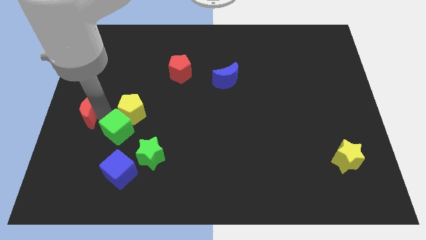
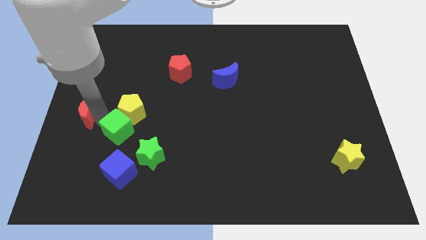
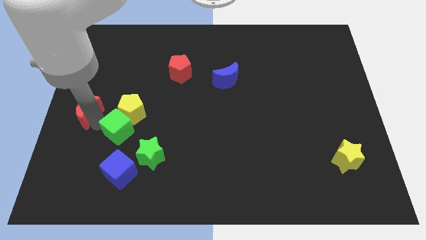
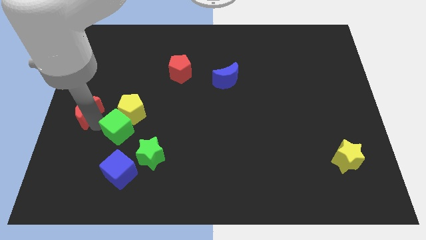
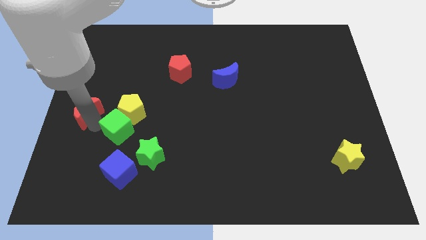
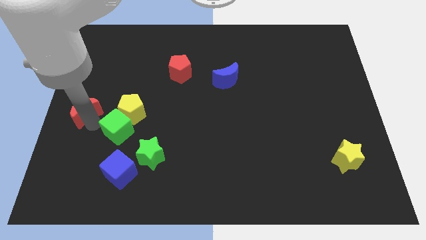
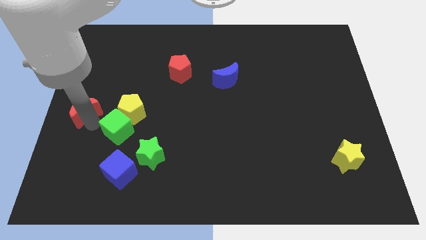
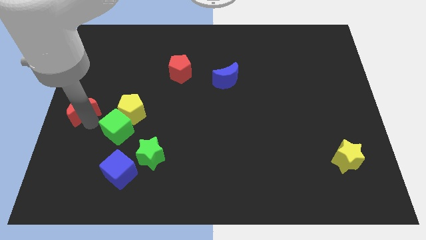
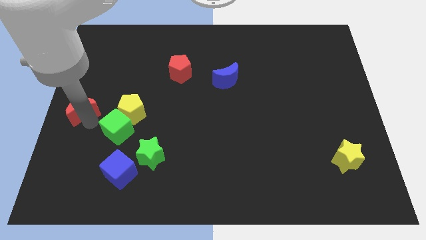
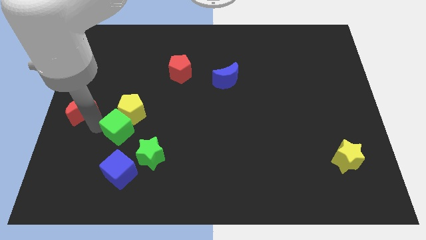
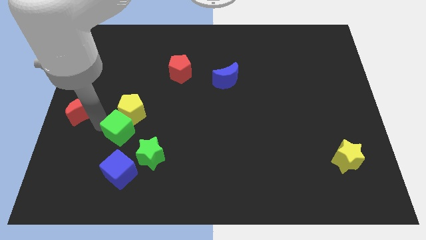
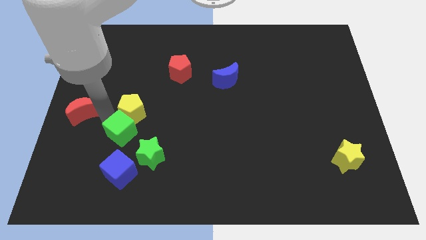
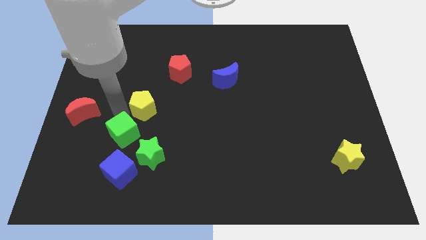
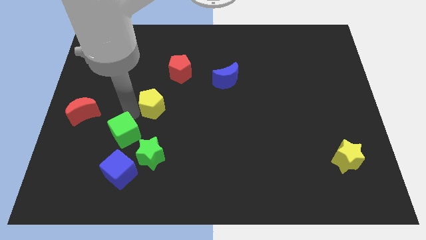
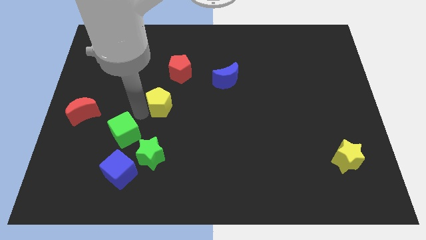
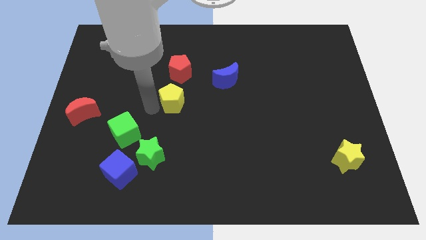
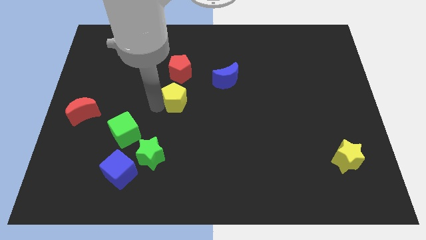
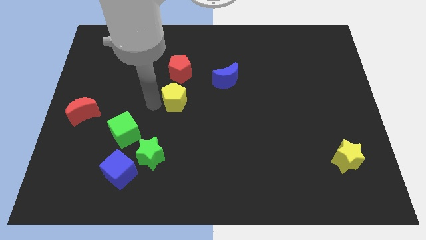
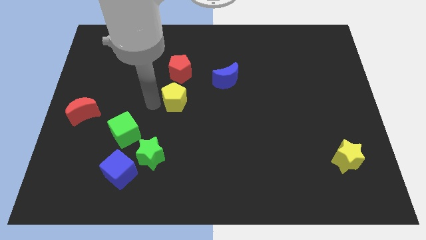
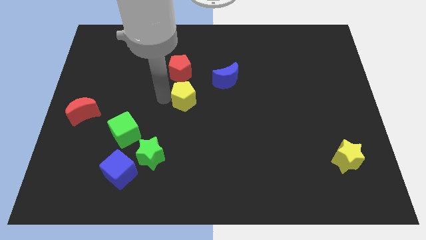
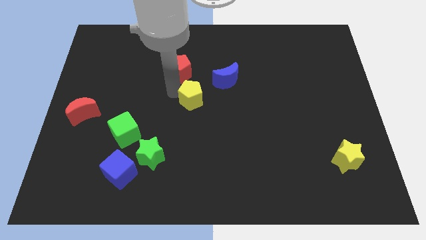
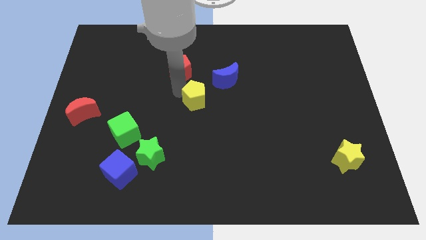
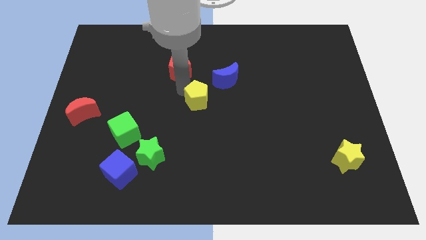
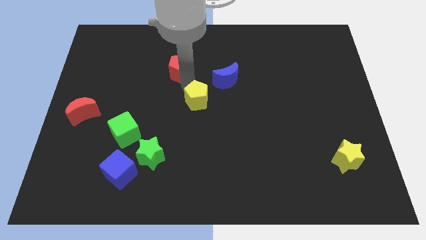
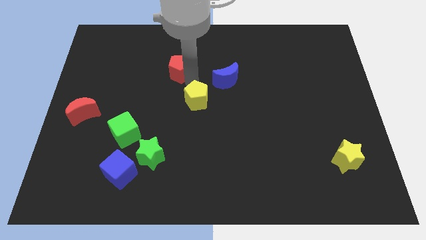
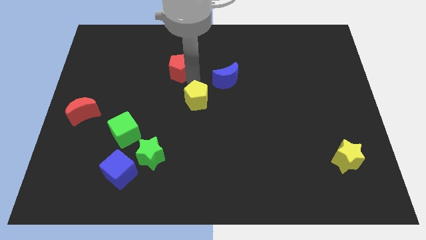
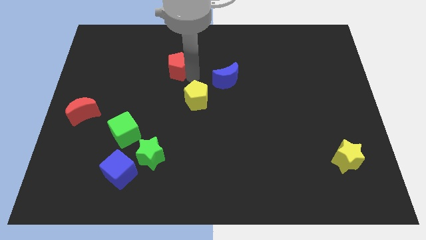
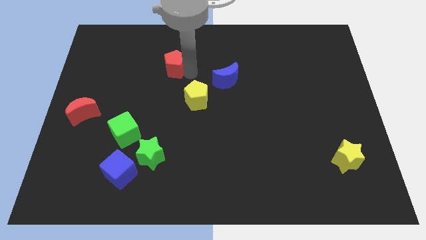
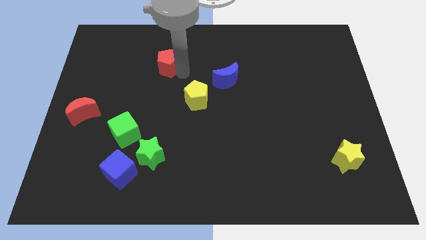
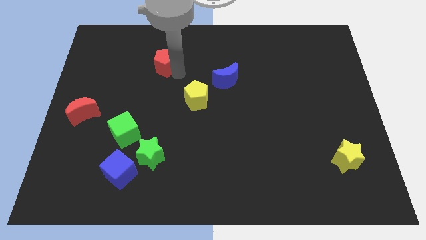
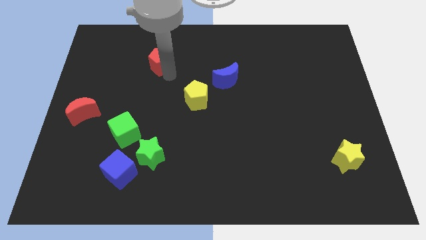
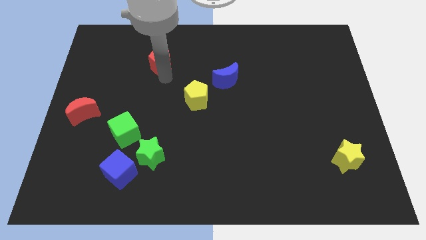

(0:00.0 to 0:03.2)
move the yellow pentagon away from the green cube

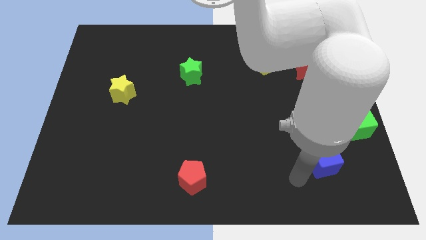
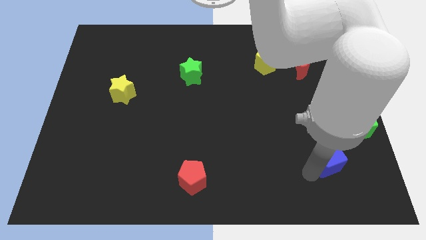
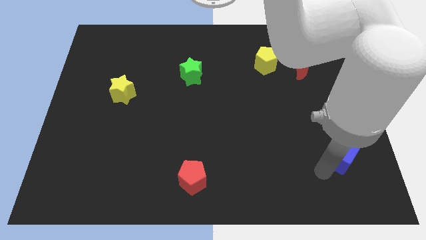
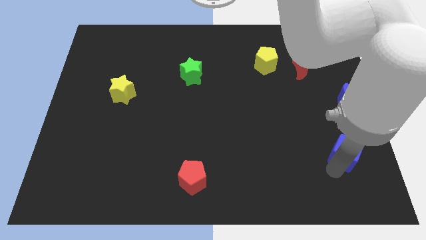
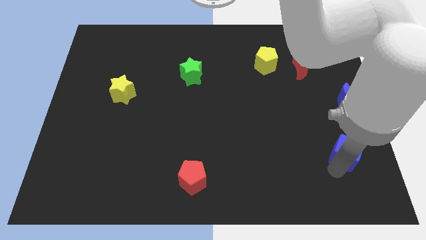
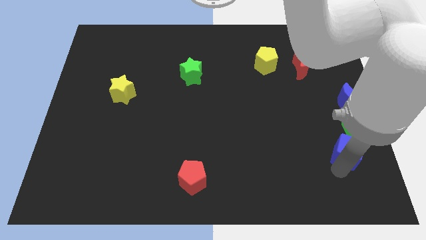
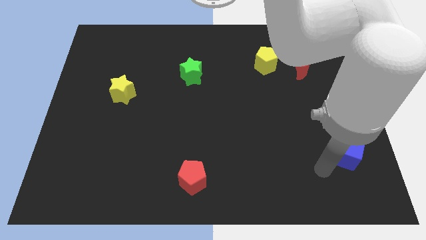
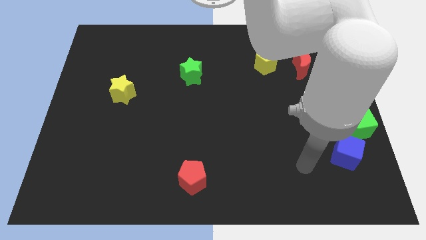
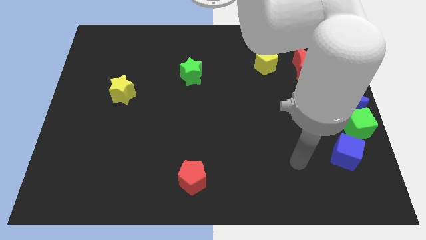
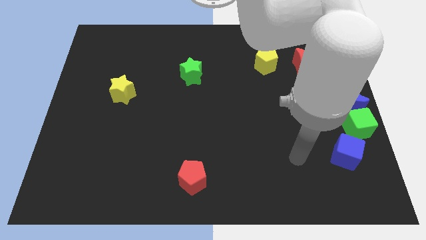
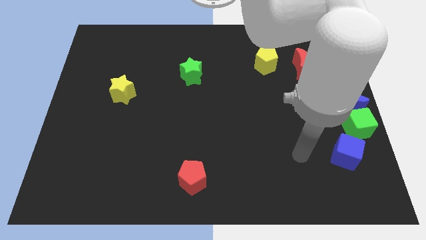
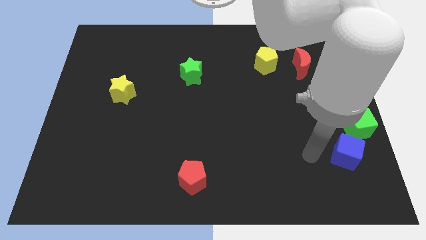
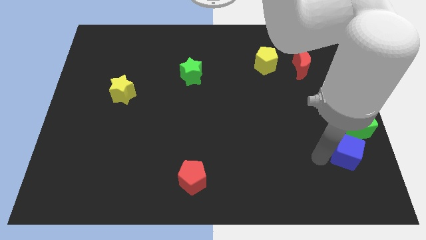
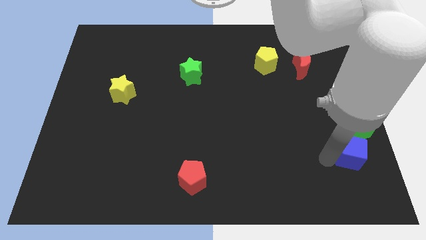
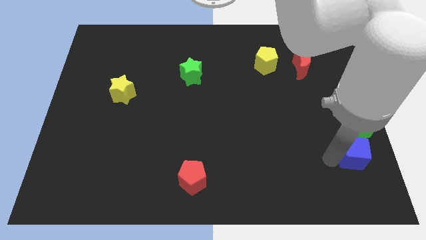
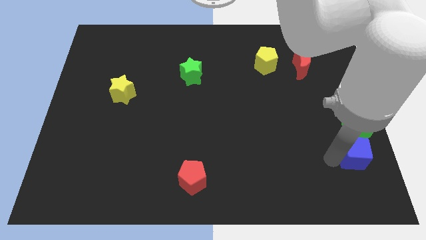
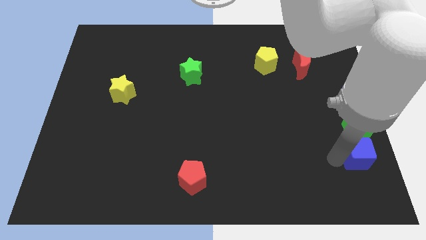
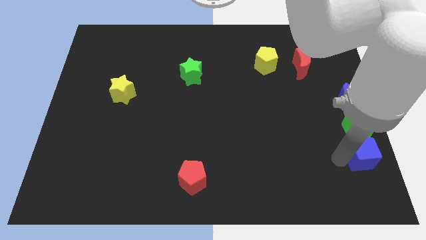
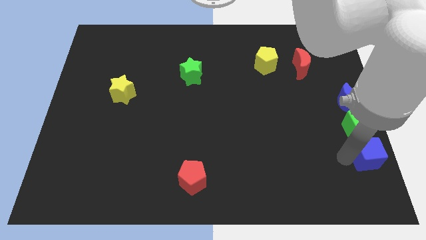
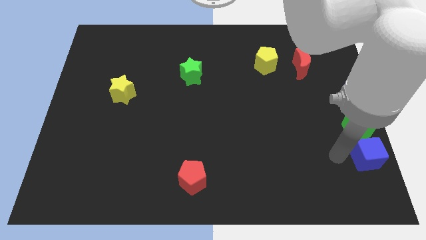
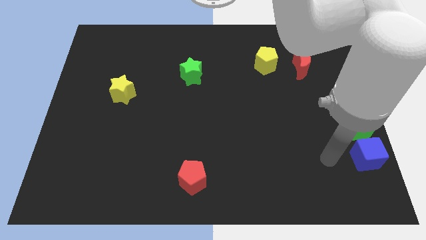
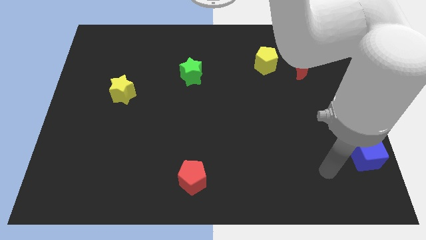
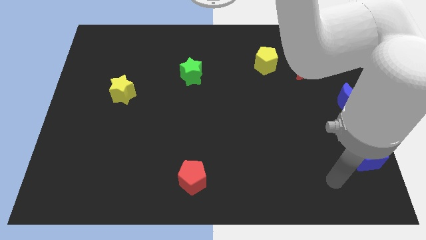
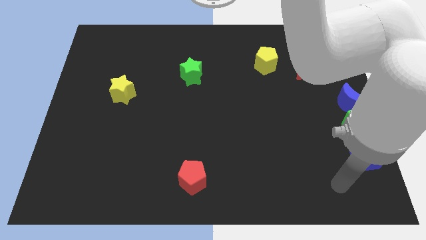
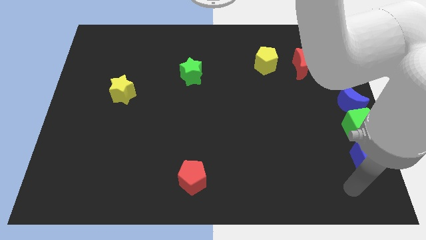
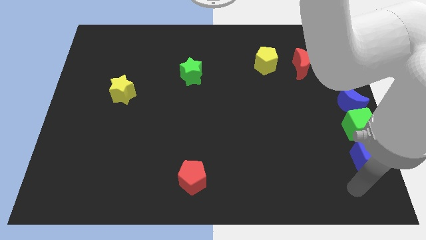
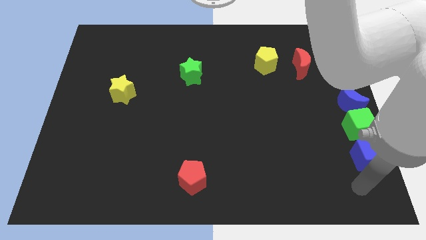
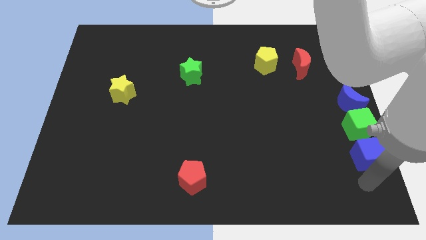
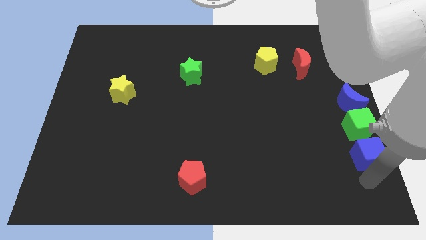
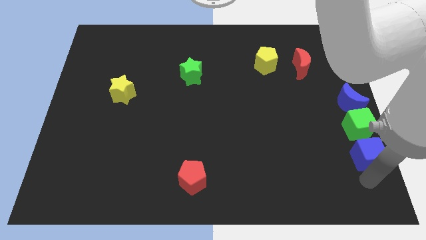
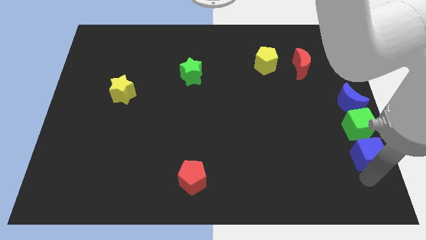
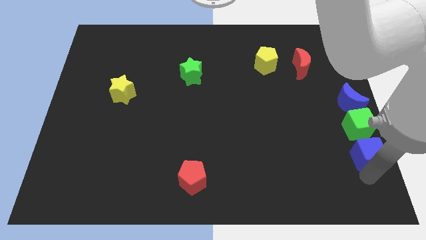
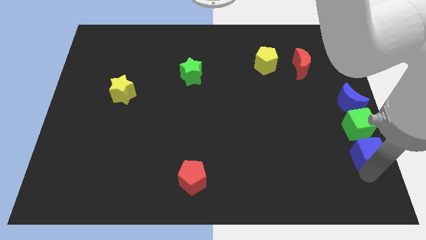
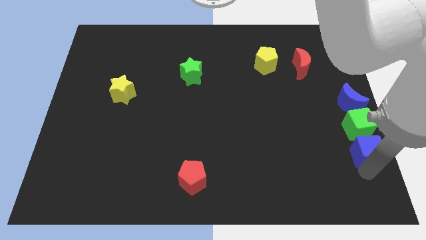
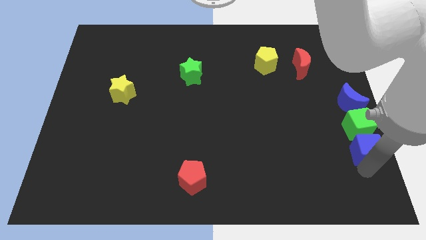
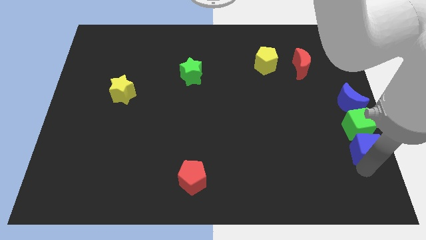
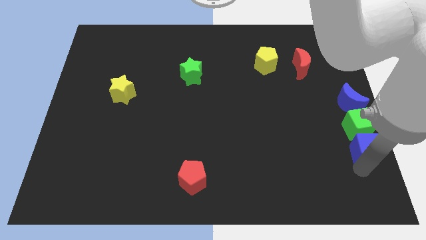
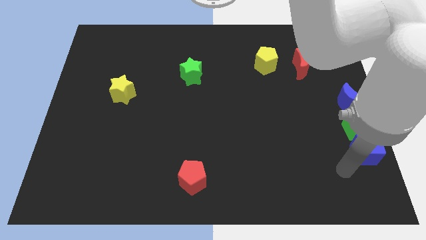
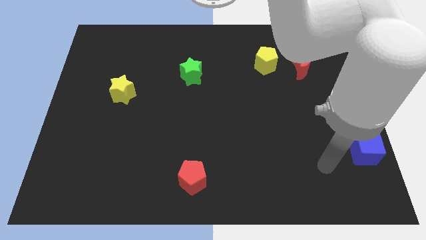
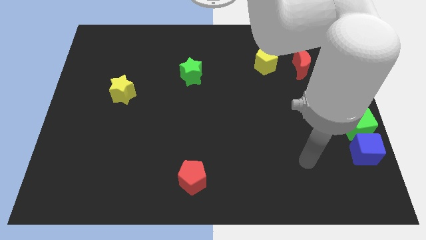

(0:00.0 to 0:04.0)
move the blue cube below the green cube

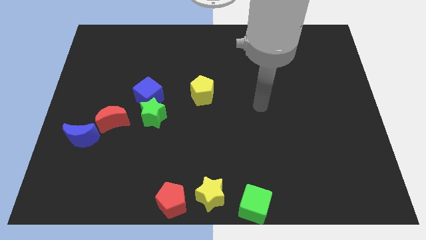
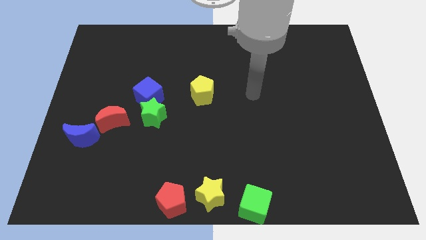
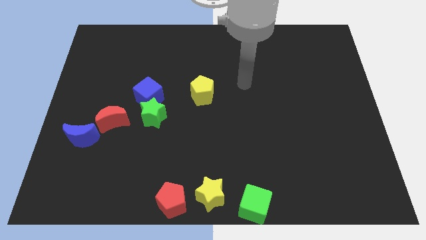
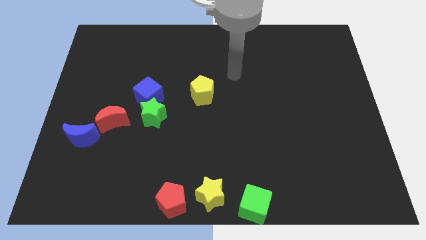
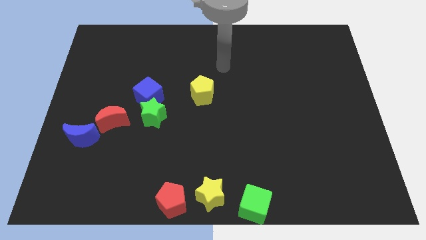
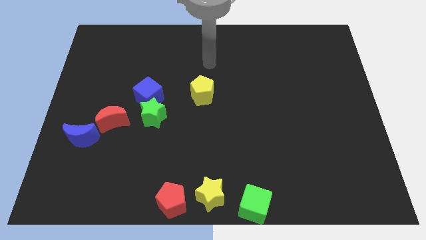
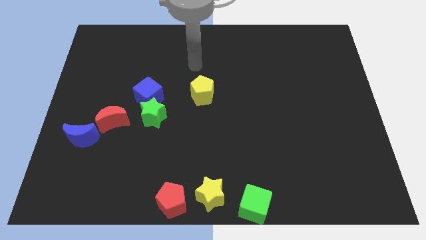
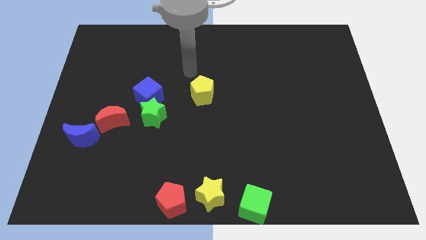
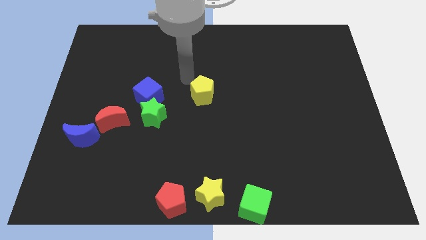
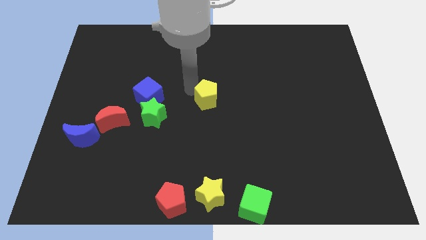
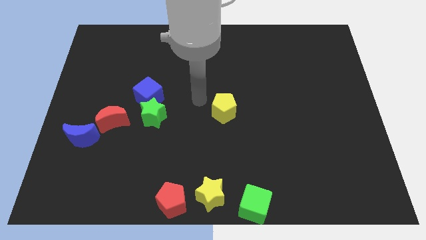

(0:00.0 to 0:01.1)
place the yellow pentagon at the center of the board

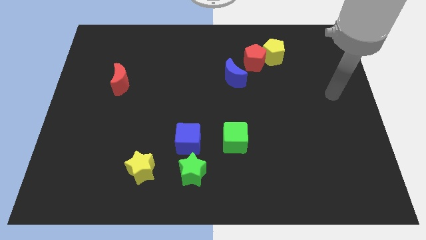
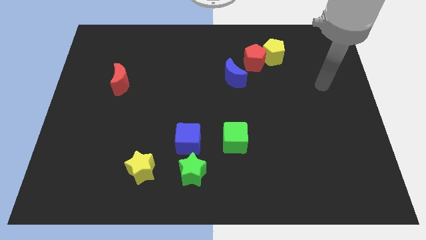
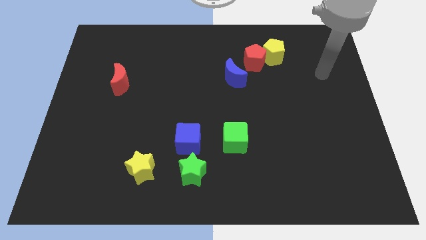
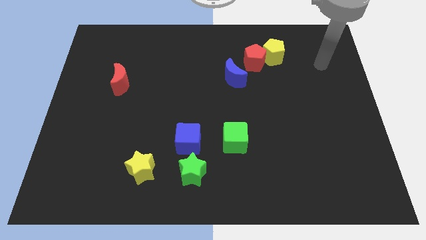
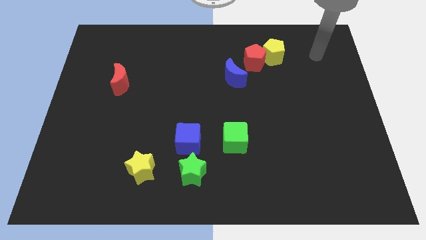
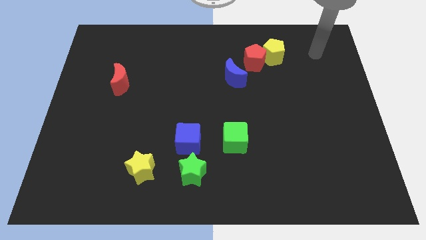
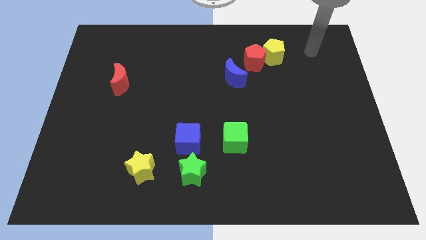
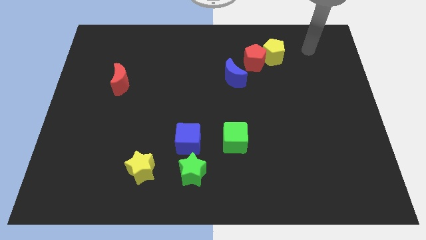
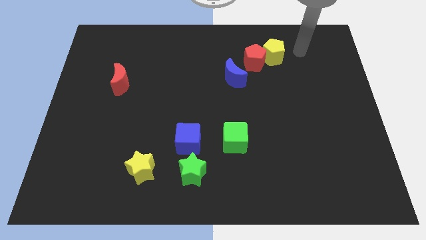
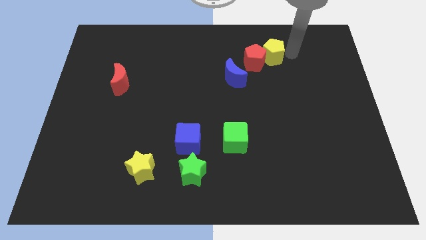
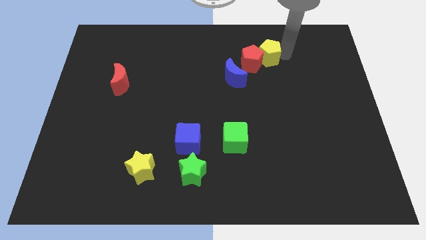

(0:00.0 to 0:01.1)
tap on the right side of yellow pentagon
